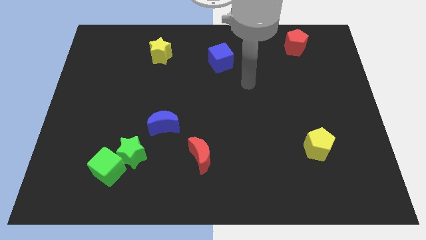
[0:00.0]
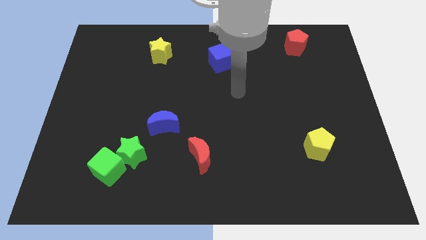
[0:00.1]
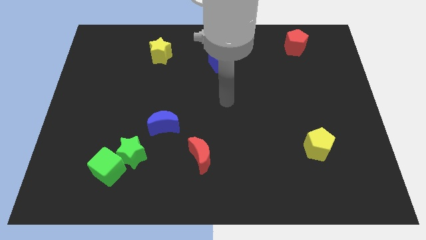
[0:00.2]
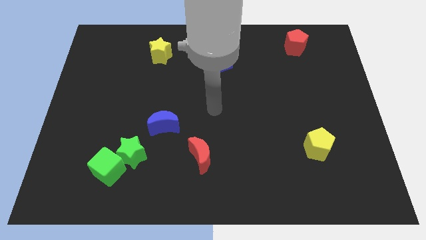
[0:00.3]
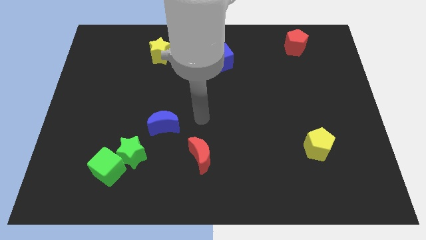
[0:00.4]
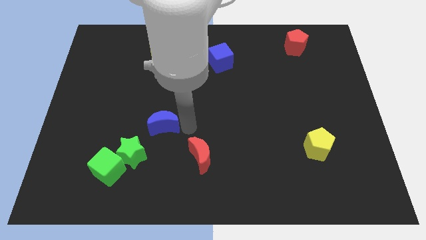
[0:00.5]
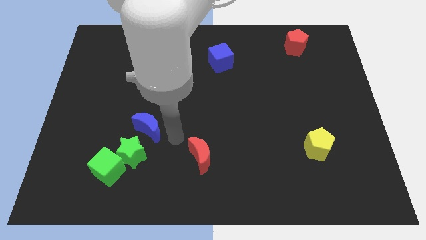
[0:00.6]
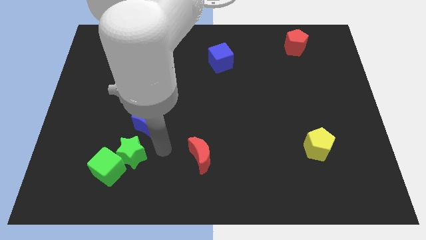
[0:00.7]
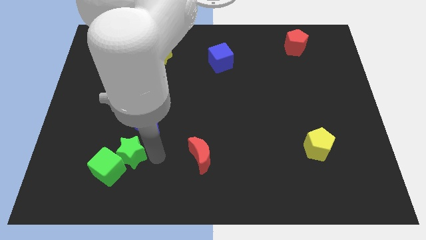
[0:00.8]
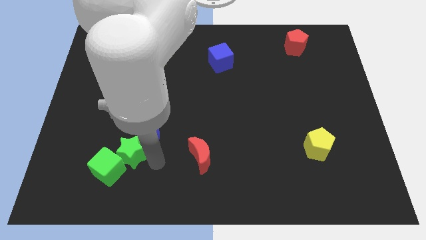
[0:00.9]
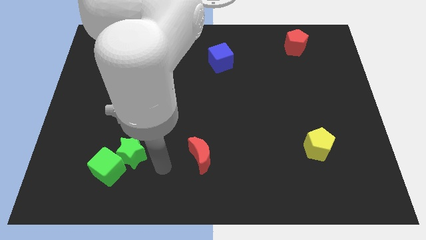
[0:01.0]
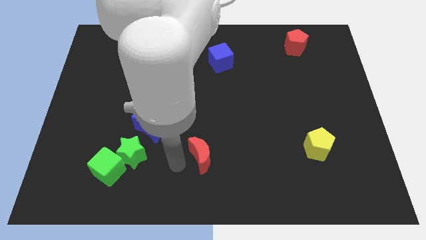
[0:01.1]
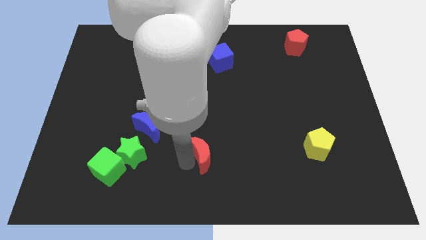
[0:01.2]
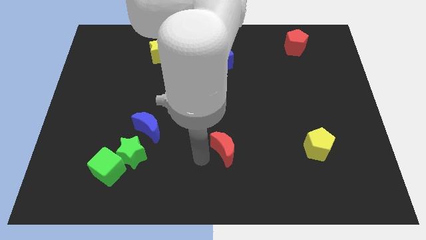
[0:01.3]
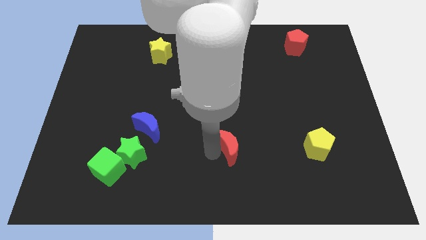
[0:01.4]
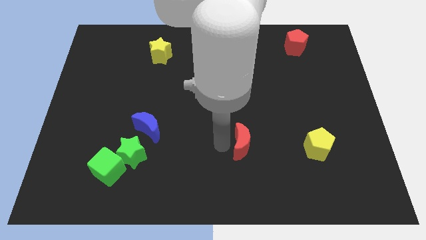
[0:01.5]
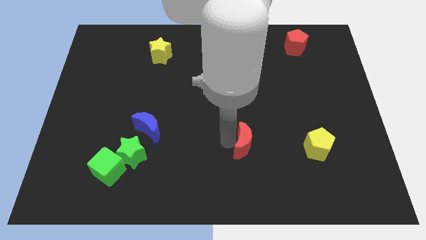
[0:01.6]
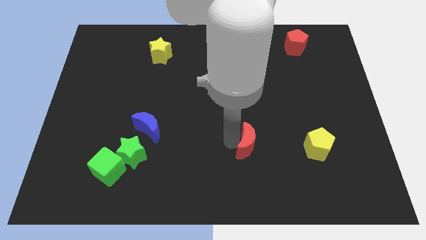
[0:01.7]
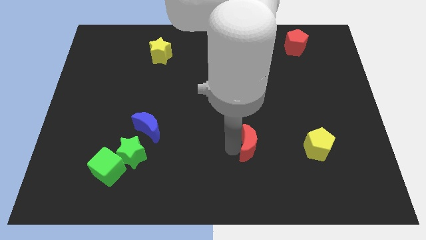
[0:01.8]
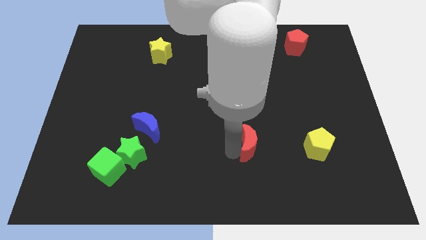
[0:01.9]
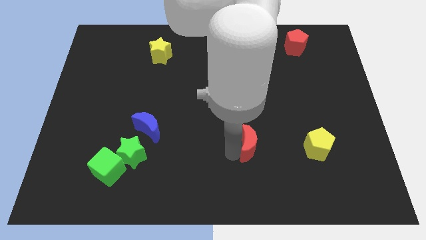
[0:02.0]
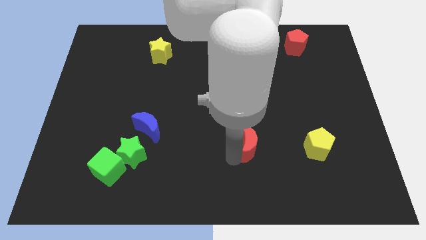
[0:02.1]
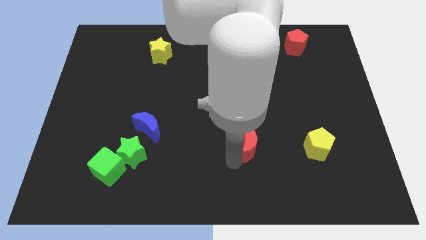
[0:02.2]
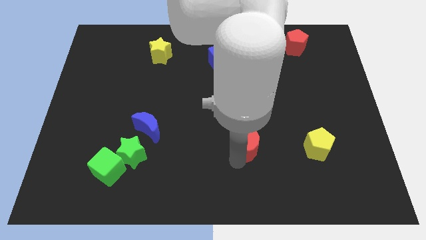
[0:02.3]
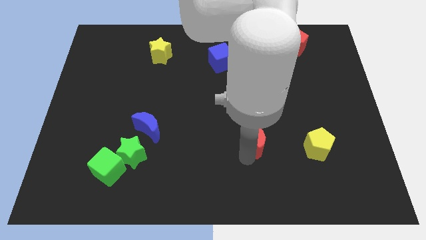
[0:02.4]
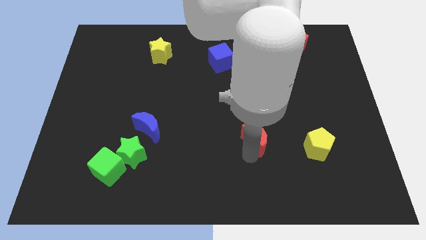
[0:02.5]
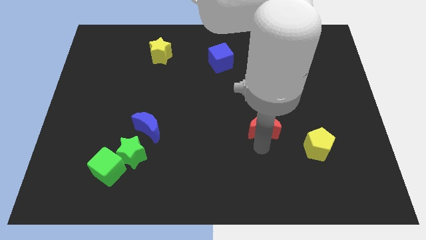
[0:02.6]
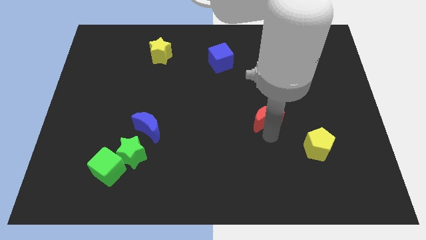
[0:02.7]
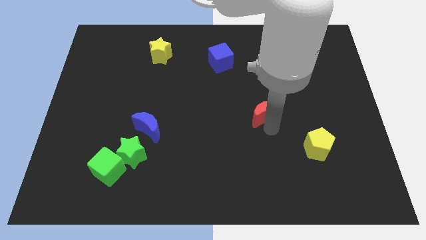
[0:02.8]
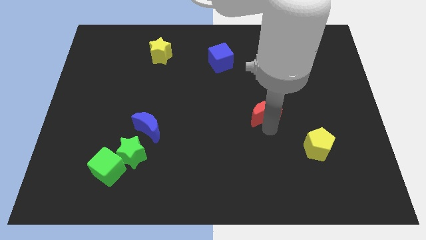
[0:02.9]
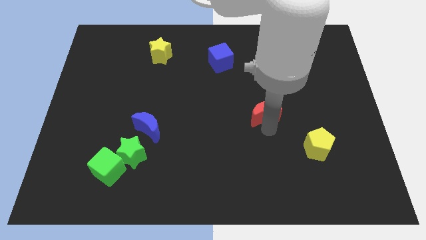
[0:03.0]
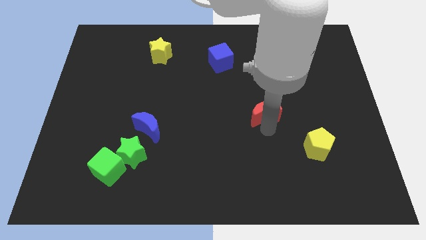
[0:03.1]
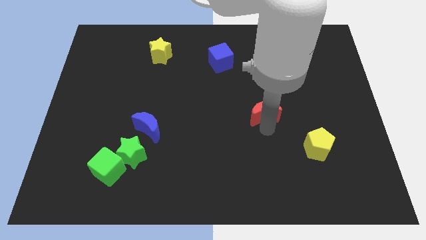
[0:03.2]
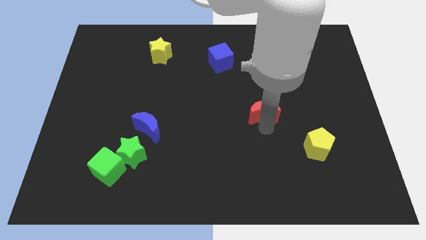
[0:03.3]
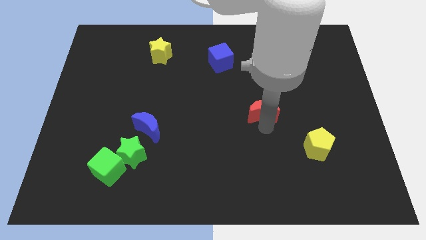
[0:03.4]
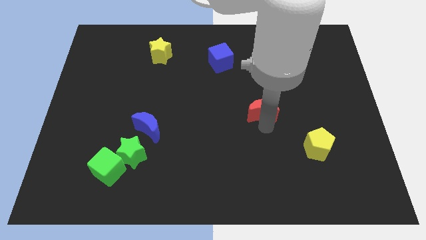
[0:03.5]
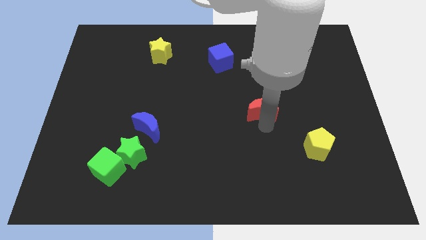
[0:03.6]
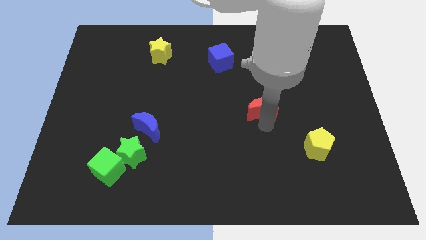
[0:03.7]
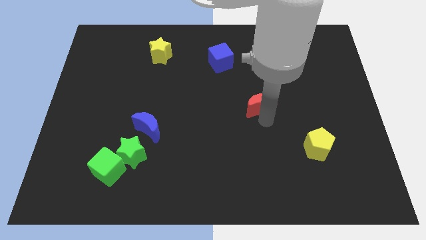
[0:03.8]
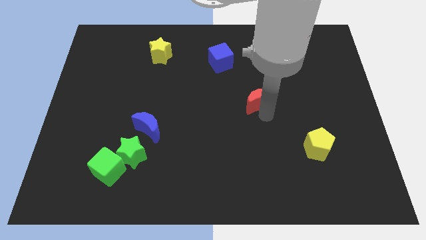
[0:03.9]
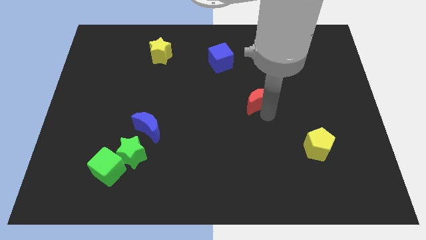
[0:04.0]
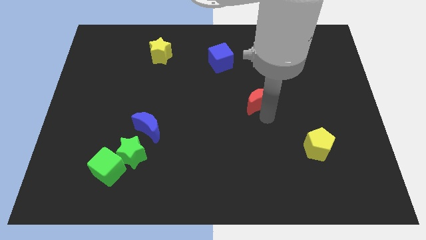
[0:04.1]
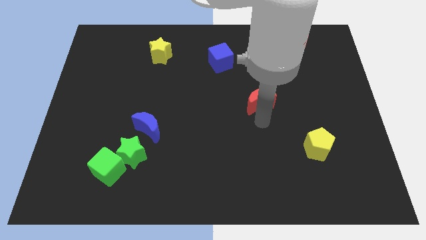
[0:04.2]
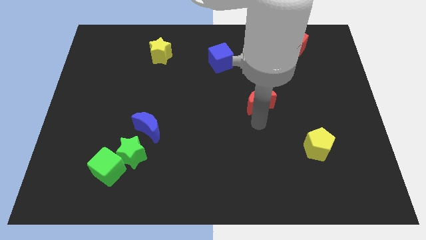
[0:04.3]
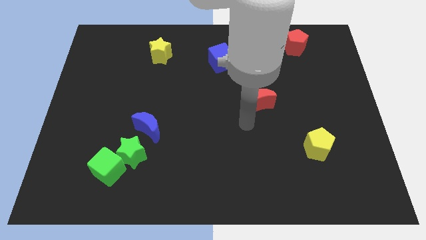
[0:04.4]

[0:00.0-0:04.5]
make a diagonal line with the red crescent blue cube and yellow pentagon

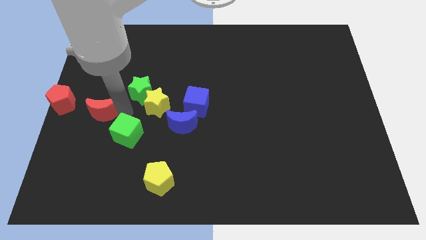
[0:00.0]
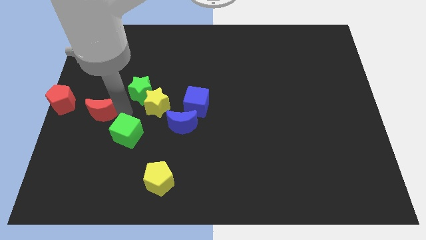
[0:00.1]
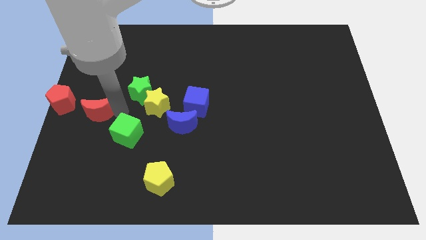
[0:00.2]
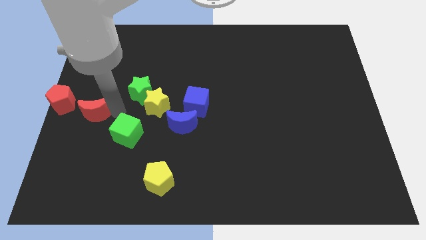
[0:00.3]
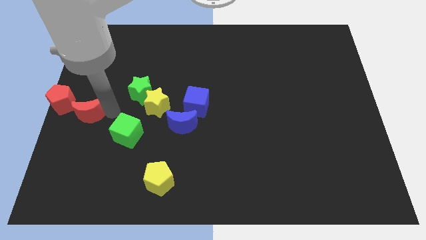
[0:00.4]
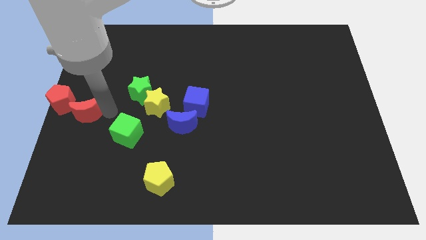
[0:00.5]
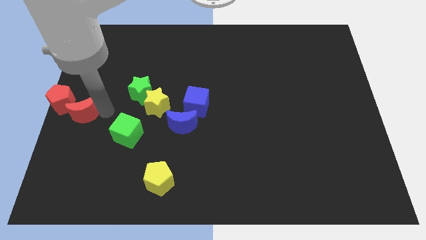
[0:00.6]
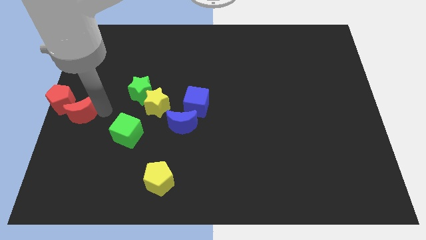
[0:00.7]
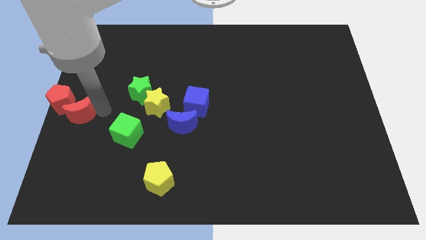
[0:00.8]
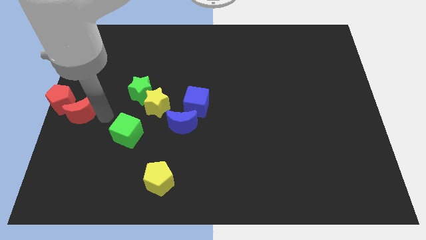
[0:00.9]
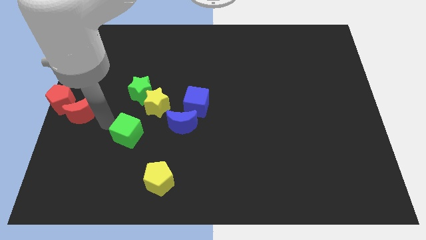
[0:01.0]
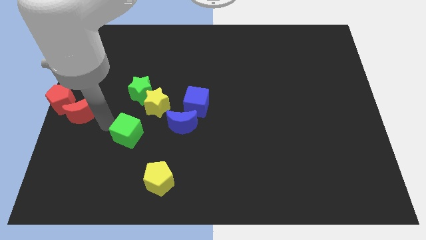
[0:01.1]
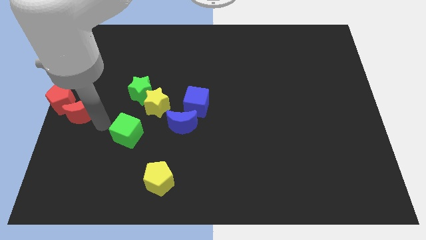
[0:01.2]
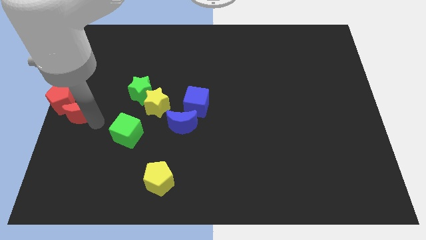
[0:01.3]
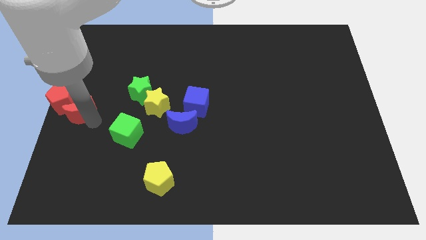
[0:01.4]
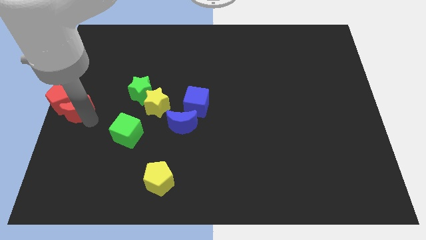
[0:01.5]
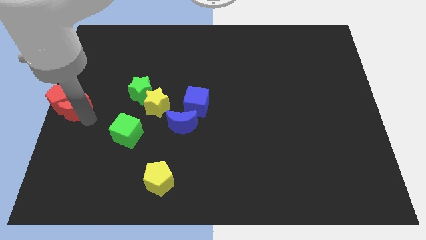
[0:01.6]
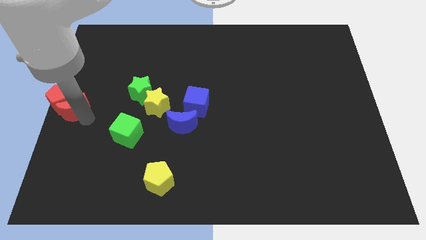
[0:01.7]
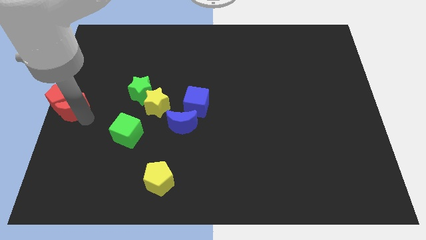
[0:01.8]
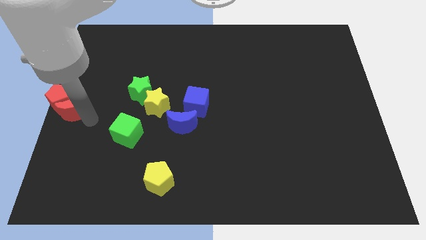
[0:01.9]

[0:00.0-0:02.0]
move the red crescent into the red pentagon

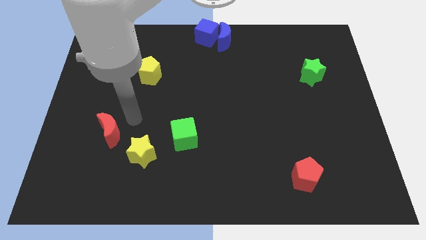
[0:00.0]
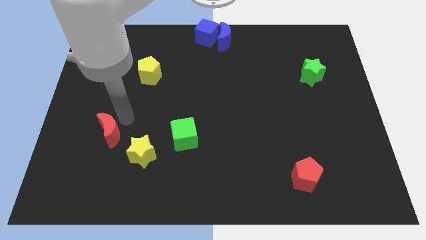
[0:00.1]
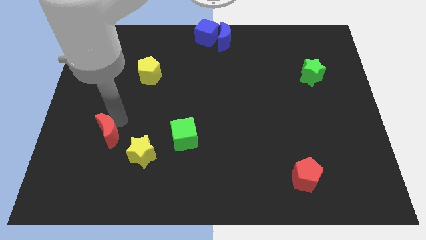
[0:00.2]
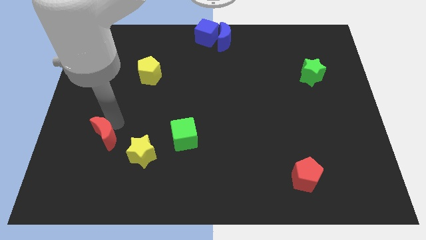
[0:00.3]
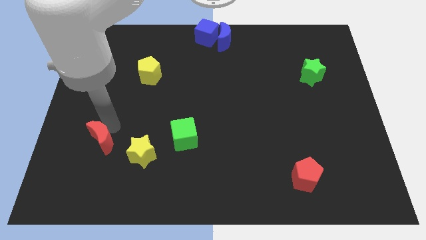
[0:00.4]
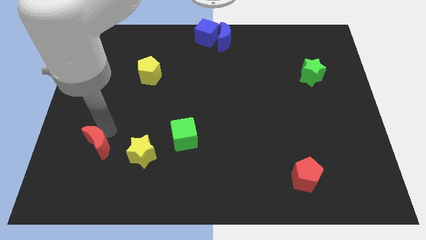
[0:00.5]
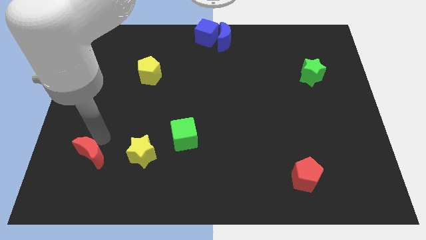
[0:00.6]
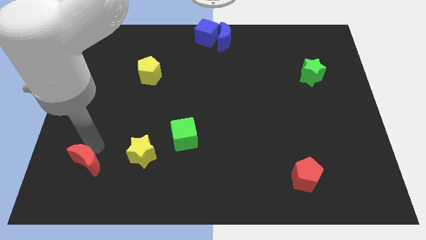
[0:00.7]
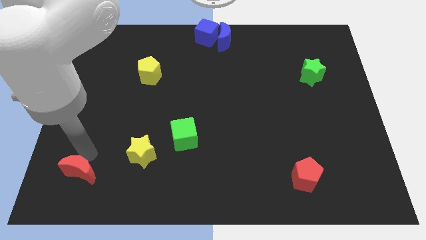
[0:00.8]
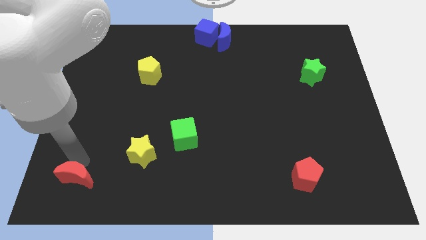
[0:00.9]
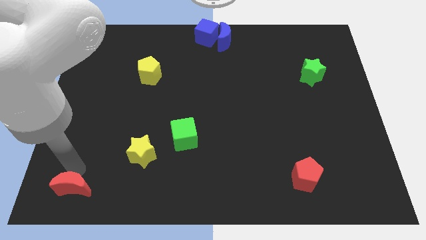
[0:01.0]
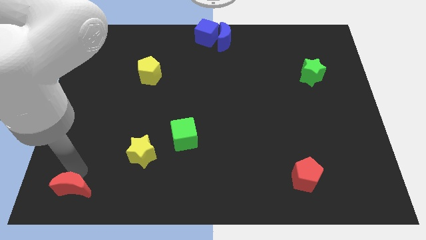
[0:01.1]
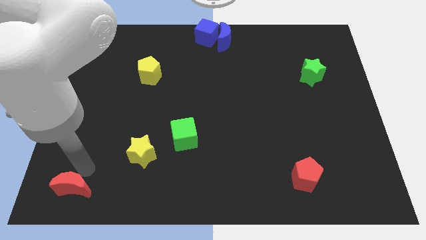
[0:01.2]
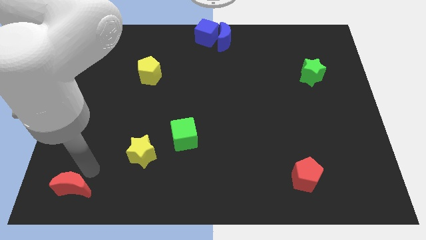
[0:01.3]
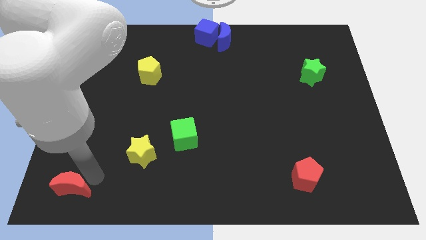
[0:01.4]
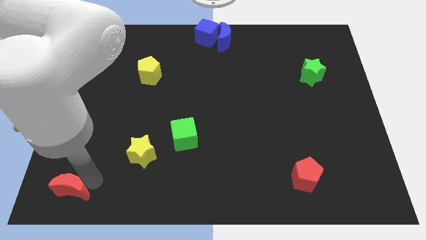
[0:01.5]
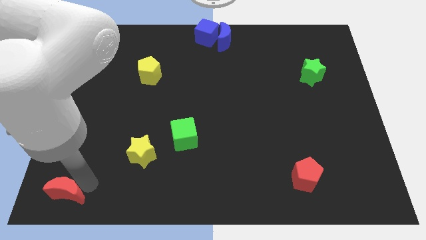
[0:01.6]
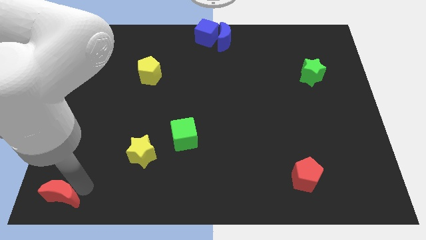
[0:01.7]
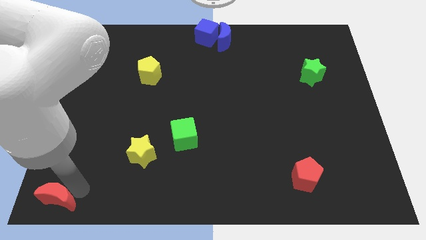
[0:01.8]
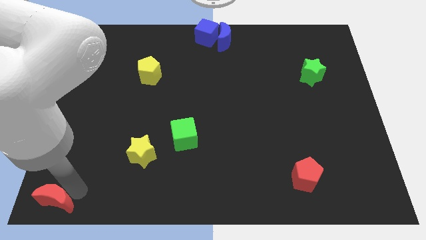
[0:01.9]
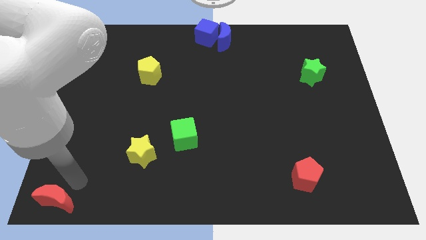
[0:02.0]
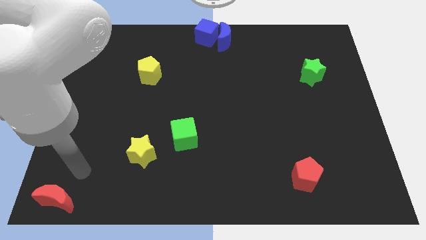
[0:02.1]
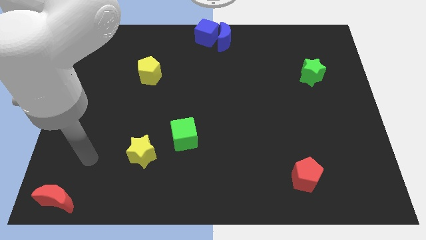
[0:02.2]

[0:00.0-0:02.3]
place the red moon to the bottom left side

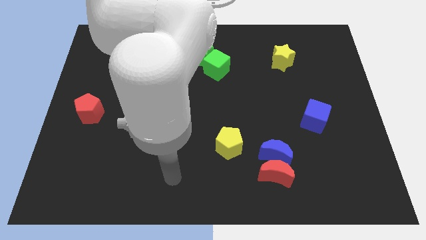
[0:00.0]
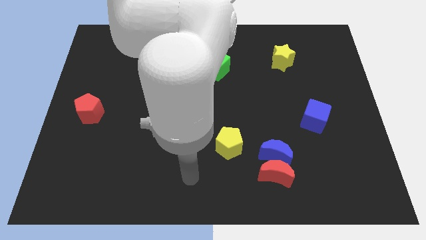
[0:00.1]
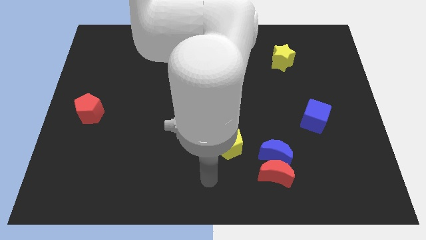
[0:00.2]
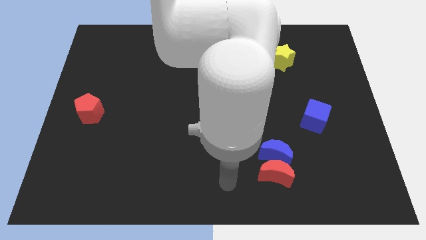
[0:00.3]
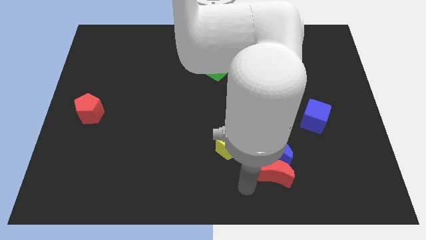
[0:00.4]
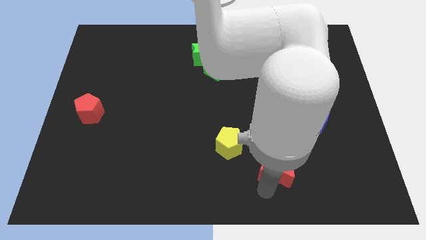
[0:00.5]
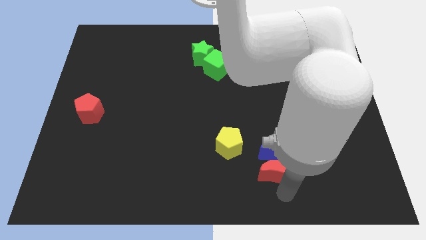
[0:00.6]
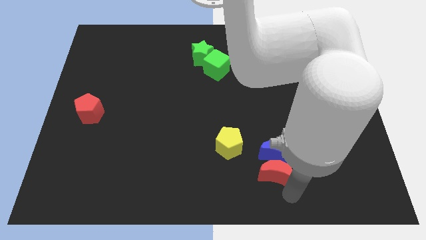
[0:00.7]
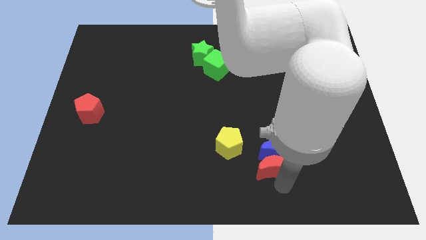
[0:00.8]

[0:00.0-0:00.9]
place the arm below the red moon
